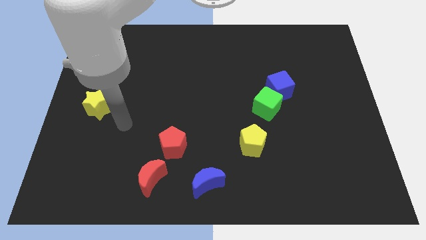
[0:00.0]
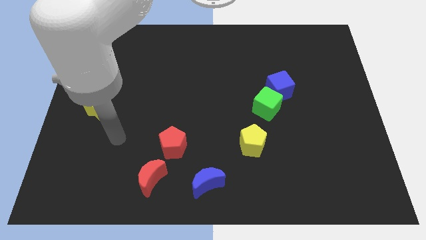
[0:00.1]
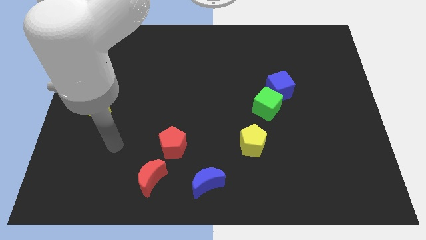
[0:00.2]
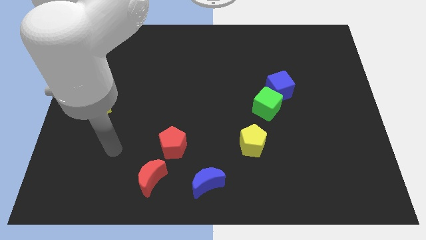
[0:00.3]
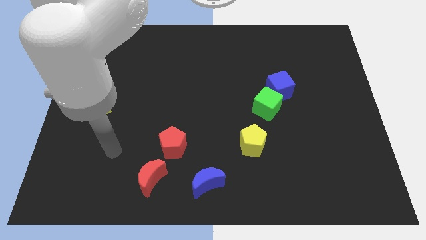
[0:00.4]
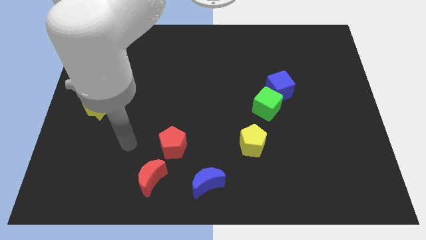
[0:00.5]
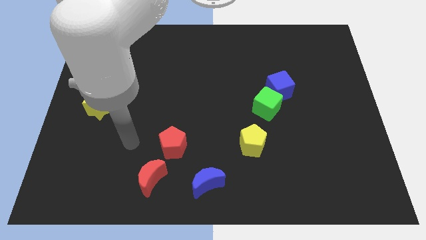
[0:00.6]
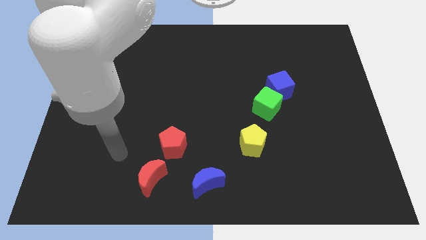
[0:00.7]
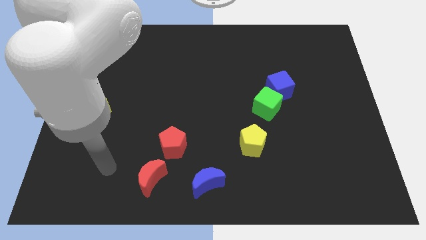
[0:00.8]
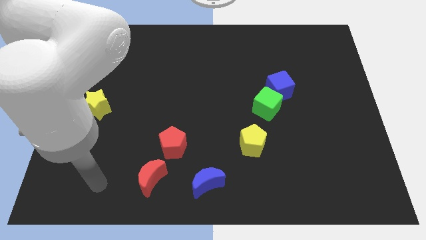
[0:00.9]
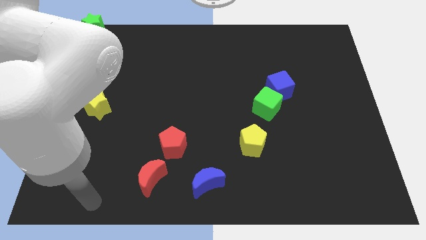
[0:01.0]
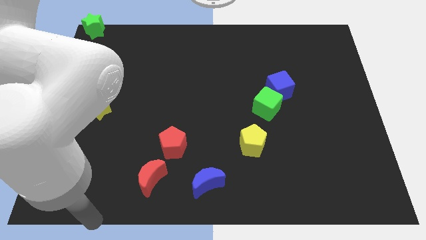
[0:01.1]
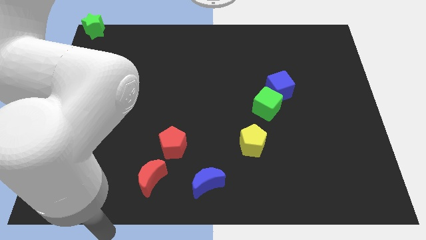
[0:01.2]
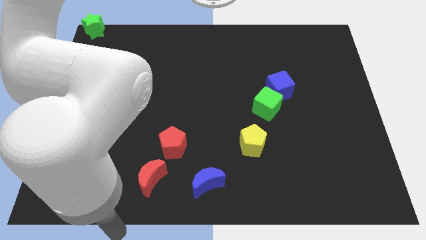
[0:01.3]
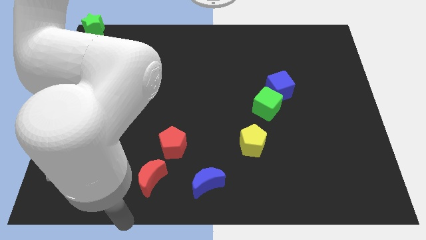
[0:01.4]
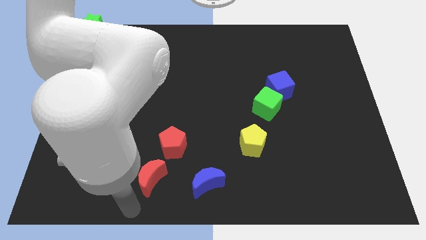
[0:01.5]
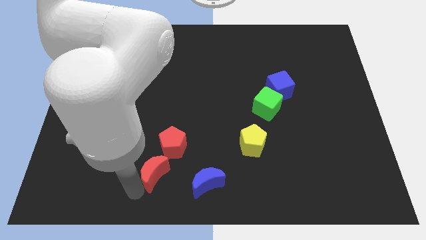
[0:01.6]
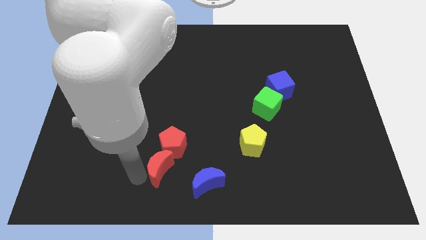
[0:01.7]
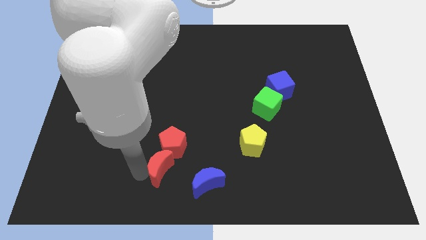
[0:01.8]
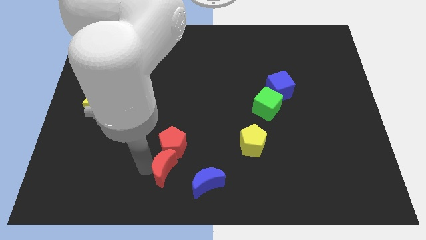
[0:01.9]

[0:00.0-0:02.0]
make red crescent to the bottom of red pentagon

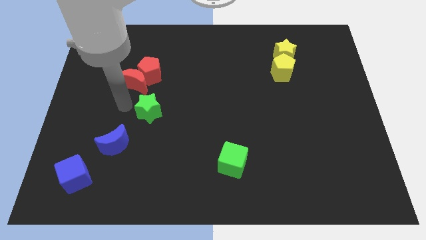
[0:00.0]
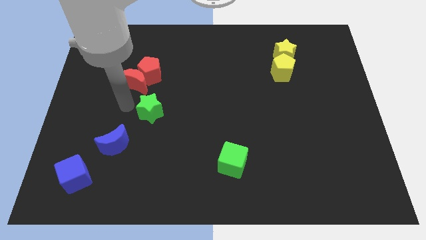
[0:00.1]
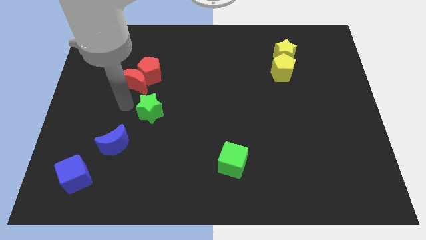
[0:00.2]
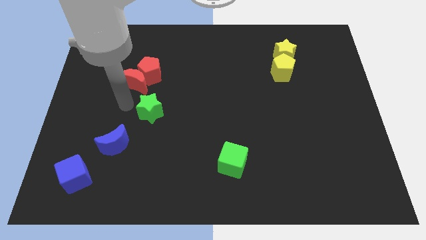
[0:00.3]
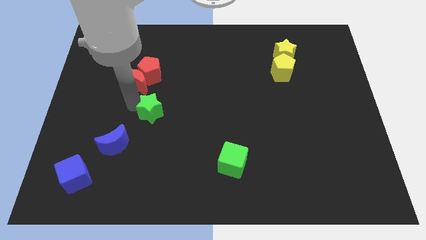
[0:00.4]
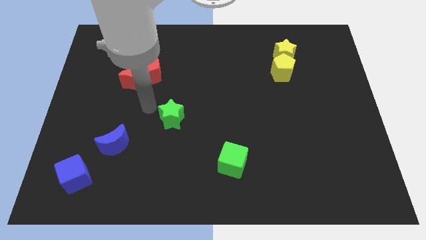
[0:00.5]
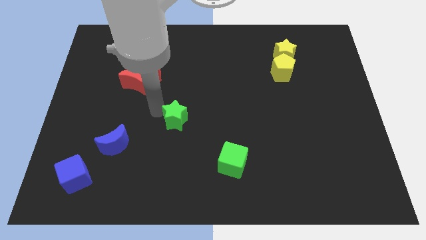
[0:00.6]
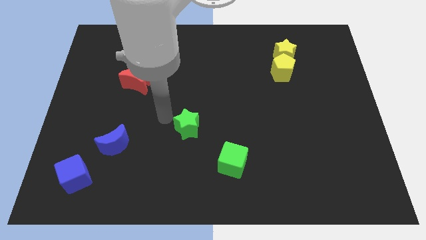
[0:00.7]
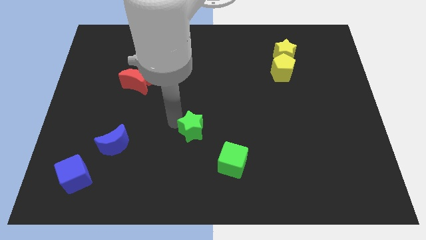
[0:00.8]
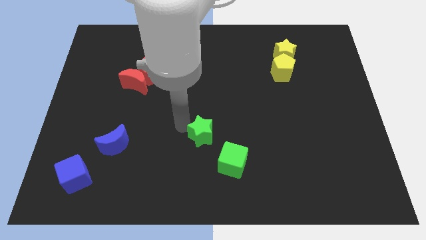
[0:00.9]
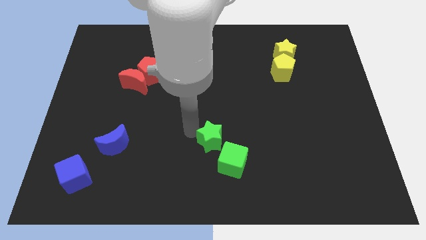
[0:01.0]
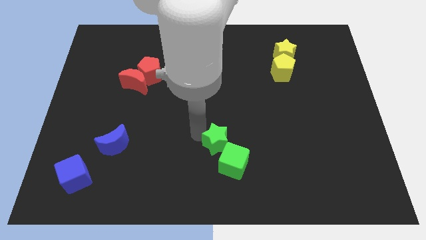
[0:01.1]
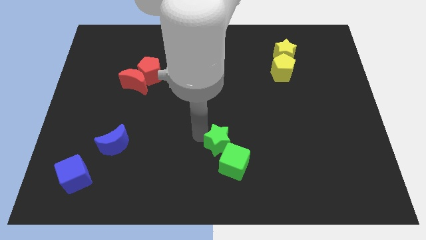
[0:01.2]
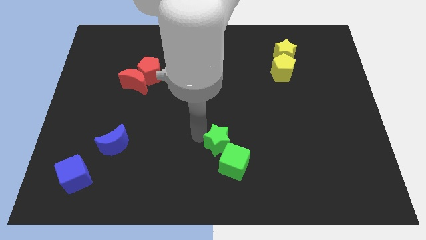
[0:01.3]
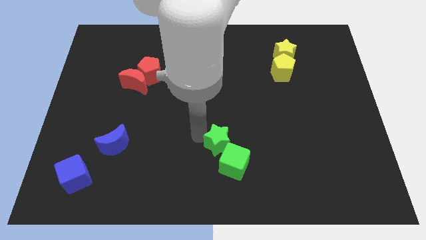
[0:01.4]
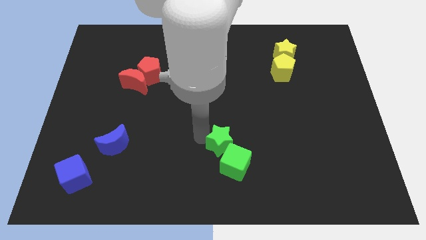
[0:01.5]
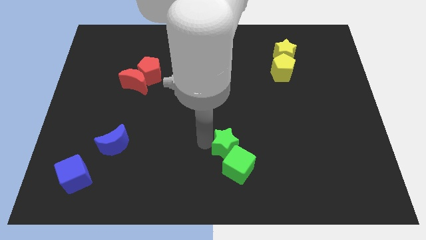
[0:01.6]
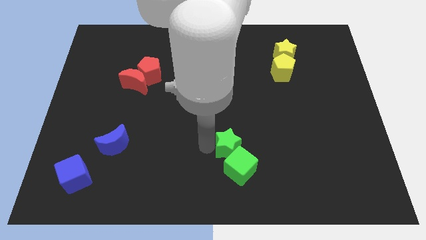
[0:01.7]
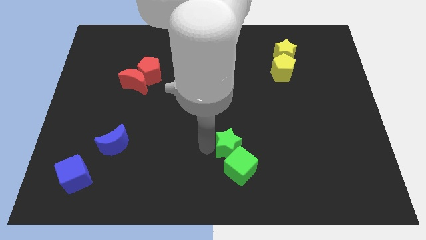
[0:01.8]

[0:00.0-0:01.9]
push the green star into the green cube

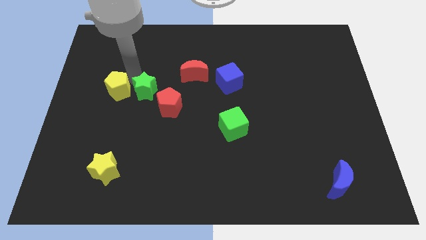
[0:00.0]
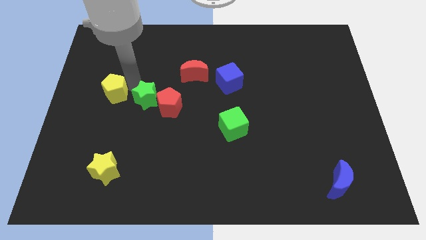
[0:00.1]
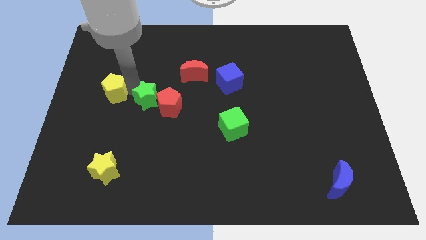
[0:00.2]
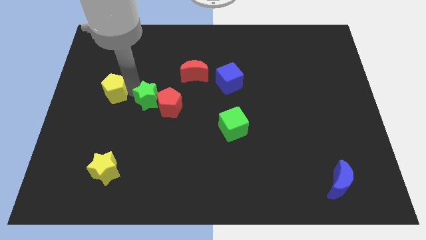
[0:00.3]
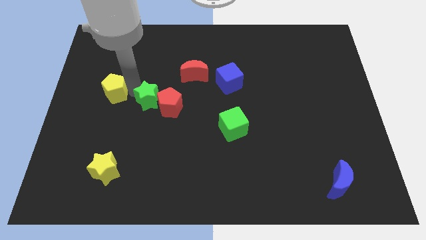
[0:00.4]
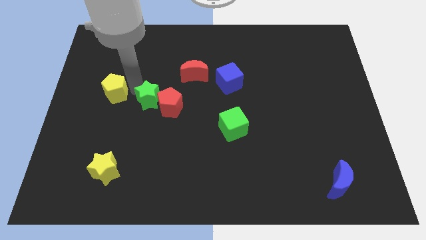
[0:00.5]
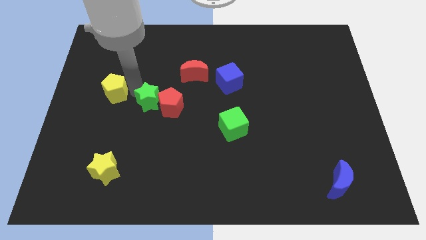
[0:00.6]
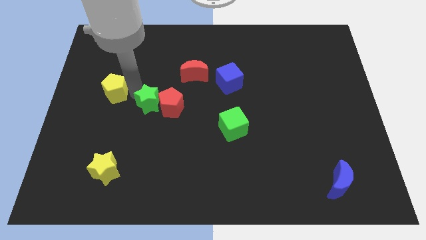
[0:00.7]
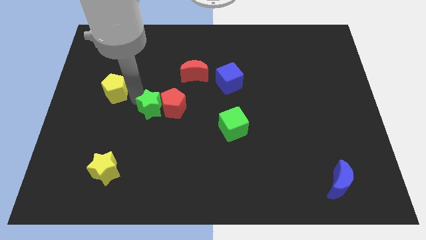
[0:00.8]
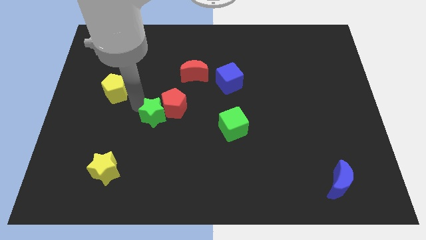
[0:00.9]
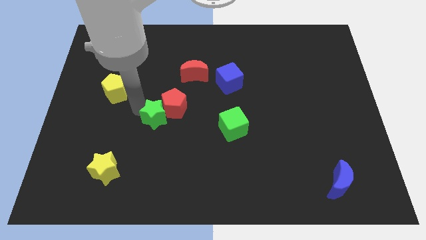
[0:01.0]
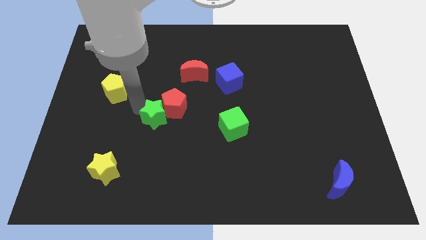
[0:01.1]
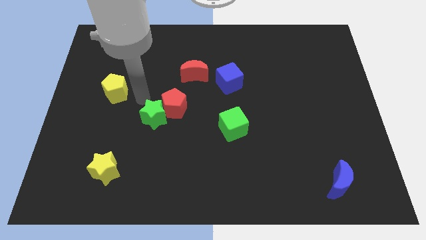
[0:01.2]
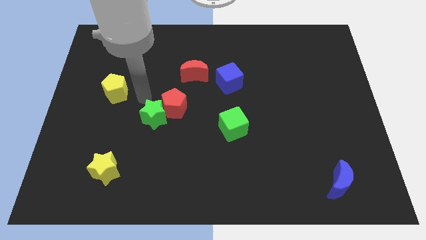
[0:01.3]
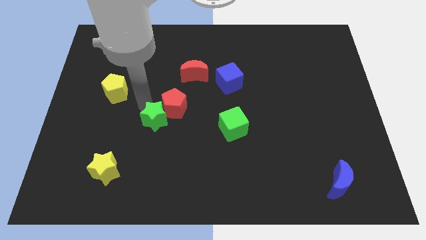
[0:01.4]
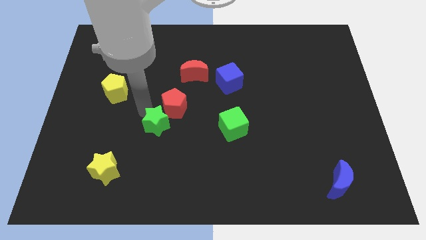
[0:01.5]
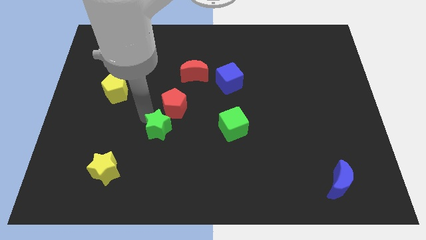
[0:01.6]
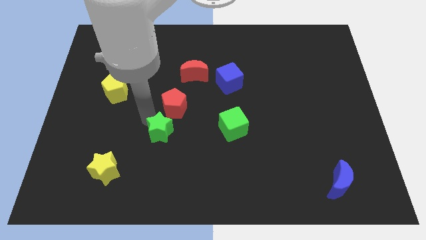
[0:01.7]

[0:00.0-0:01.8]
push the green star to the bottom left of the red pentagon

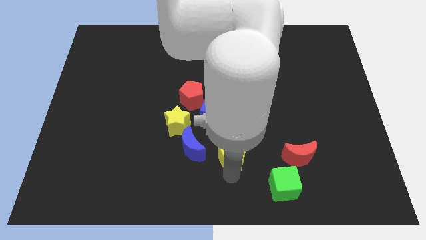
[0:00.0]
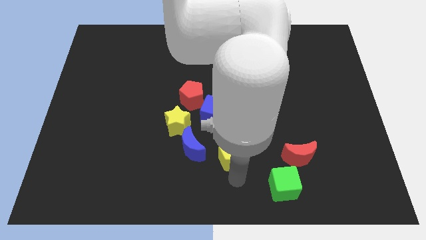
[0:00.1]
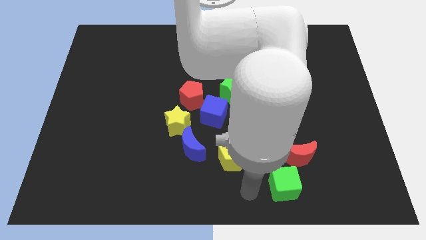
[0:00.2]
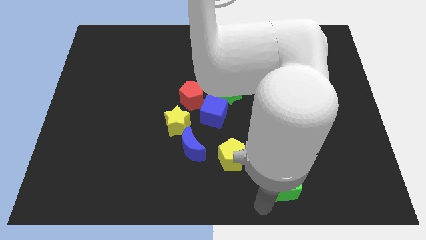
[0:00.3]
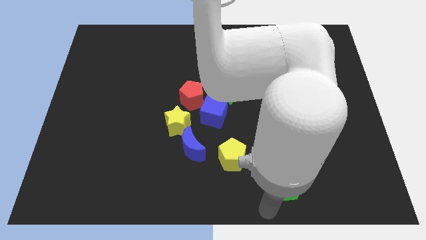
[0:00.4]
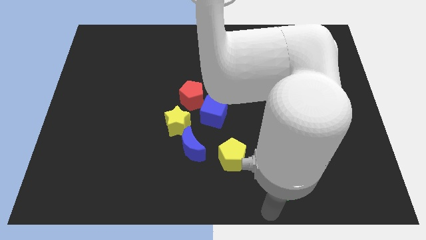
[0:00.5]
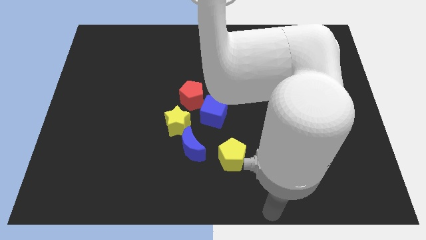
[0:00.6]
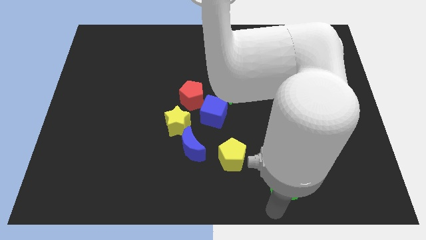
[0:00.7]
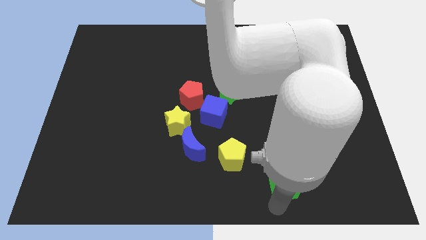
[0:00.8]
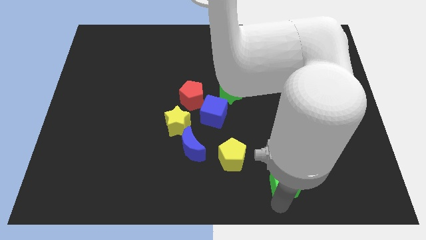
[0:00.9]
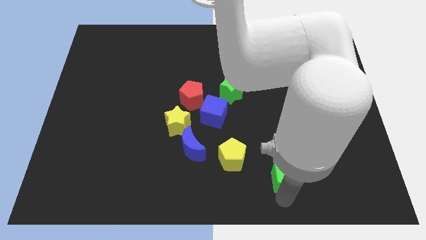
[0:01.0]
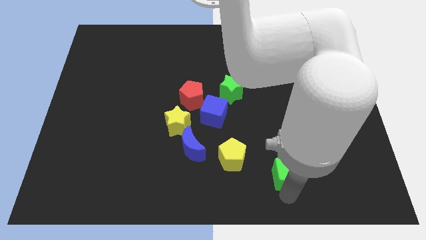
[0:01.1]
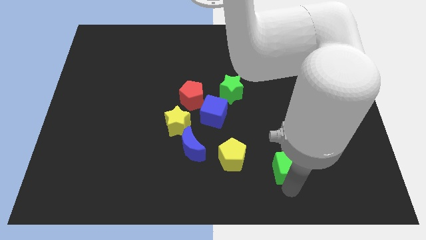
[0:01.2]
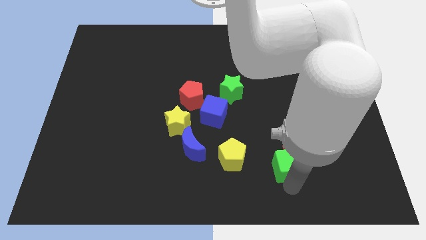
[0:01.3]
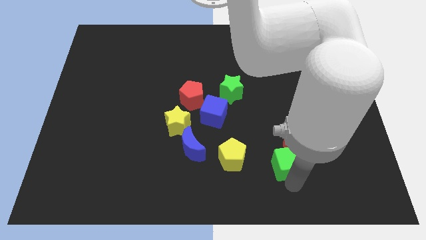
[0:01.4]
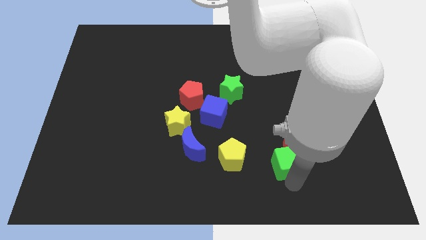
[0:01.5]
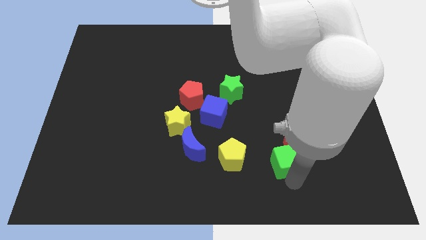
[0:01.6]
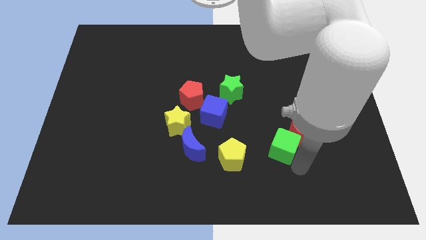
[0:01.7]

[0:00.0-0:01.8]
place the green cube right to the yellow pentagon

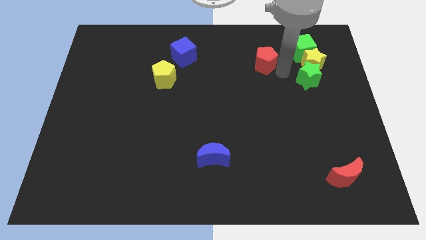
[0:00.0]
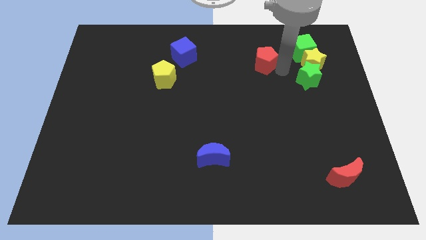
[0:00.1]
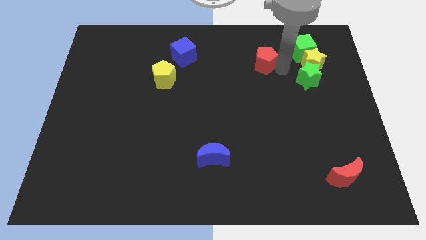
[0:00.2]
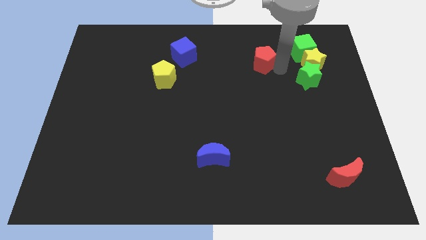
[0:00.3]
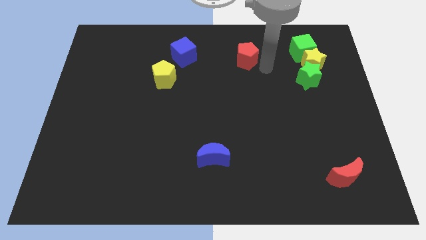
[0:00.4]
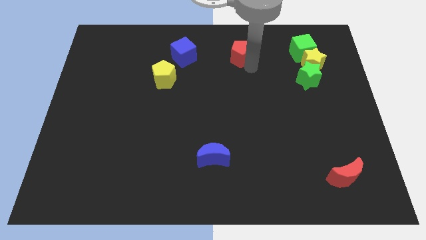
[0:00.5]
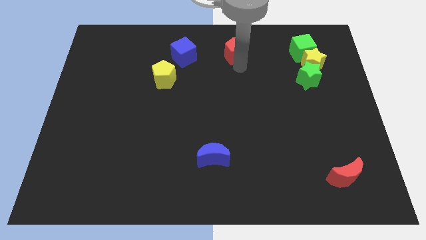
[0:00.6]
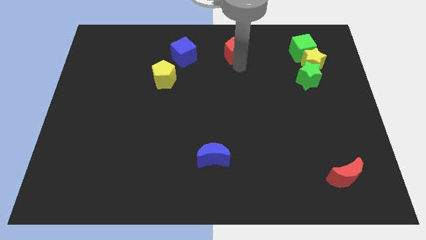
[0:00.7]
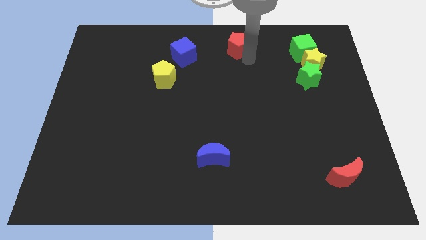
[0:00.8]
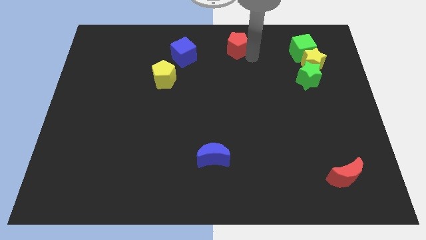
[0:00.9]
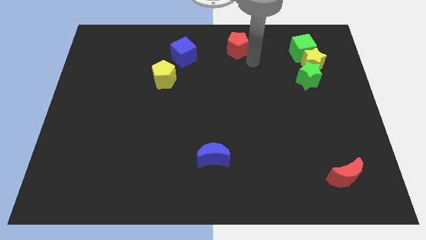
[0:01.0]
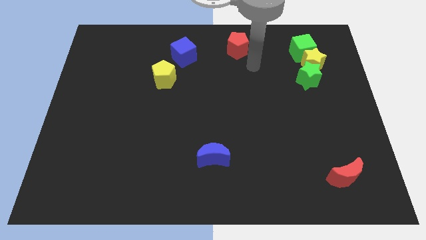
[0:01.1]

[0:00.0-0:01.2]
push the red pentagon to the top center of the board
